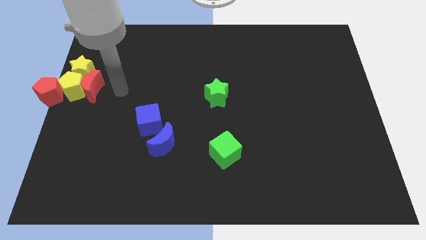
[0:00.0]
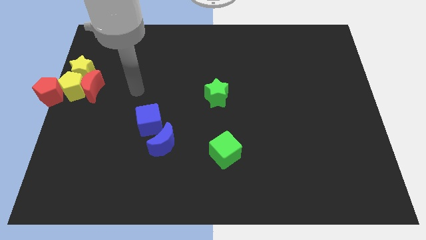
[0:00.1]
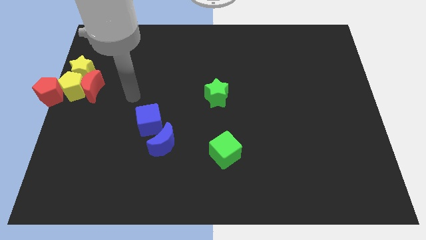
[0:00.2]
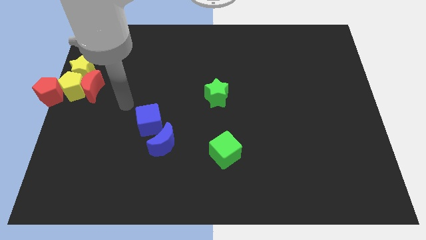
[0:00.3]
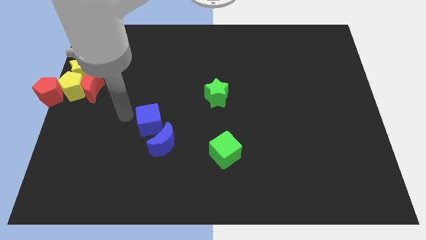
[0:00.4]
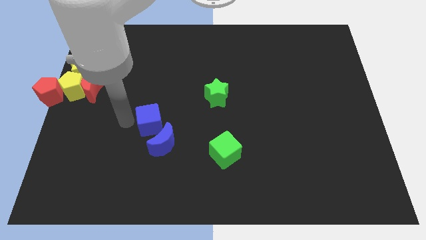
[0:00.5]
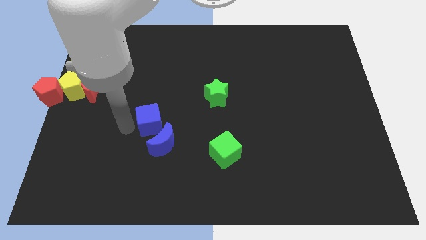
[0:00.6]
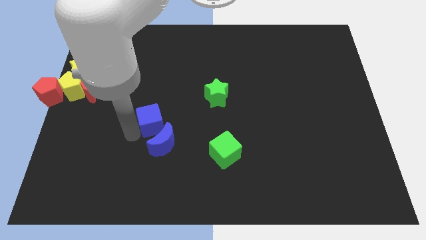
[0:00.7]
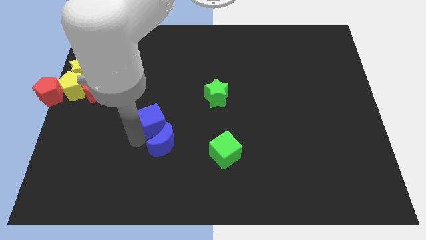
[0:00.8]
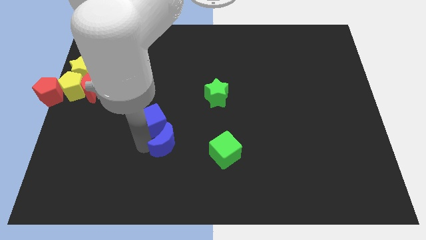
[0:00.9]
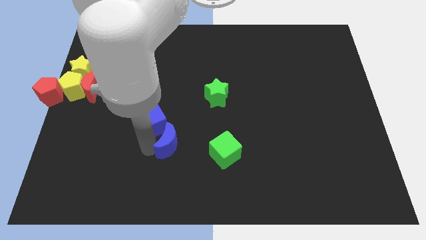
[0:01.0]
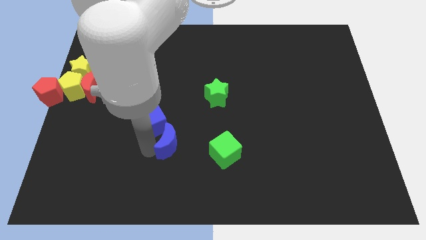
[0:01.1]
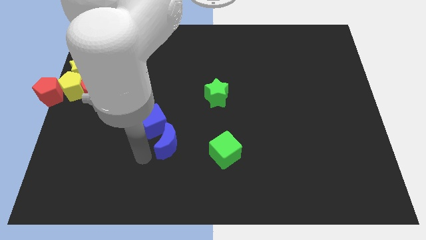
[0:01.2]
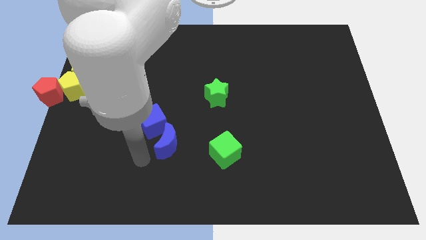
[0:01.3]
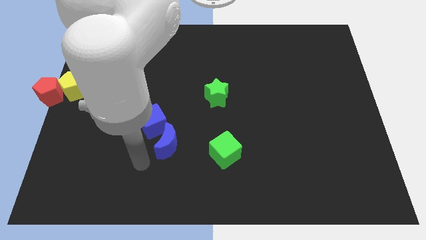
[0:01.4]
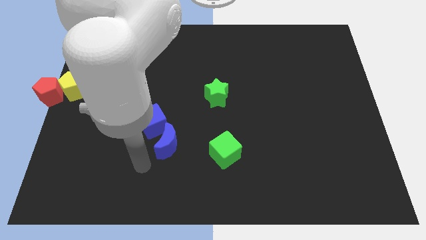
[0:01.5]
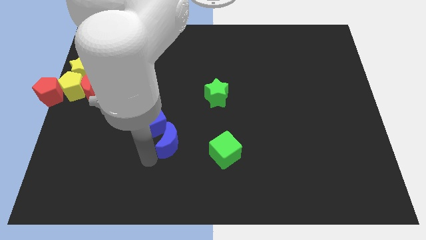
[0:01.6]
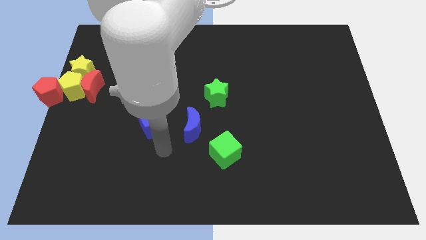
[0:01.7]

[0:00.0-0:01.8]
separate the blue crescent from the blue cube

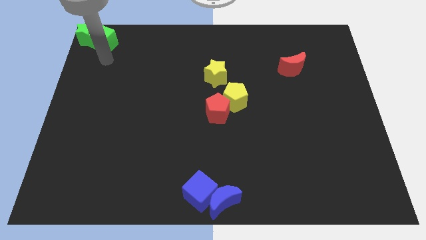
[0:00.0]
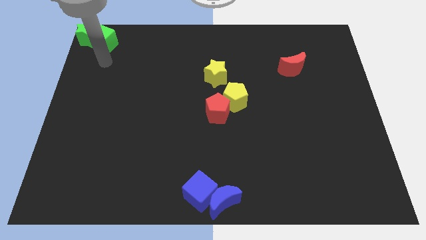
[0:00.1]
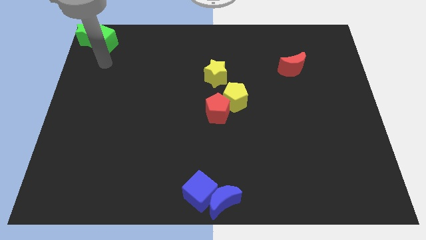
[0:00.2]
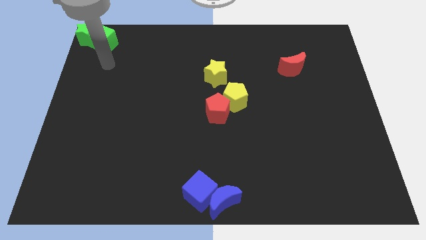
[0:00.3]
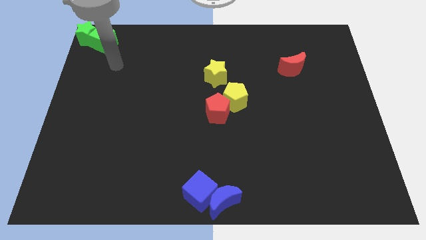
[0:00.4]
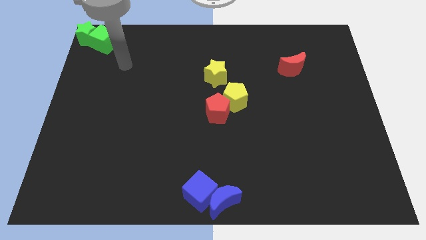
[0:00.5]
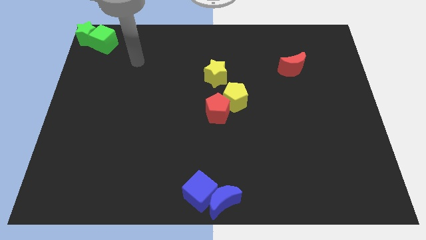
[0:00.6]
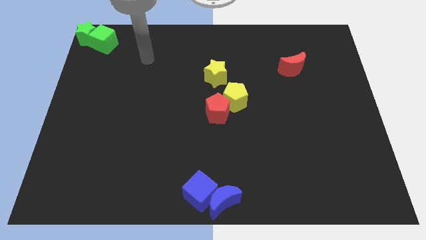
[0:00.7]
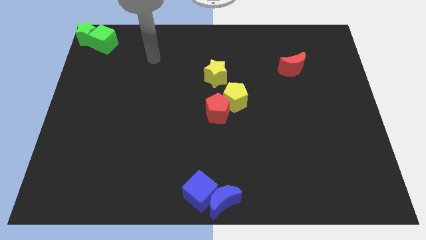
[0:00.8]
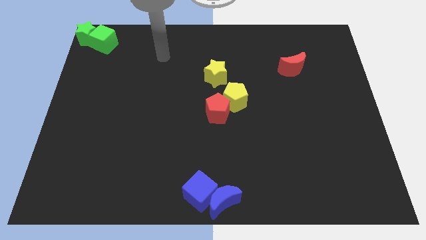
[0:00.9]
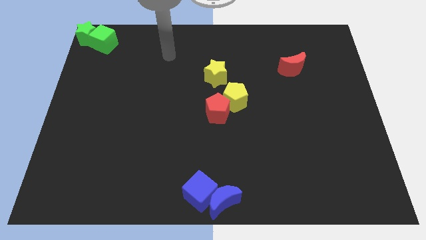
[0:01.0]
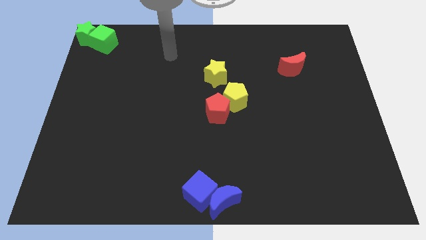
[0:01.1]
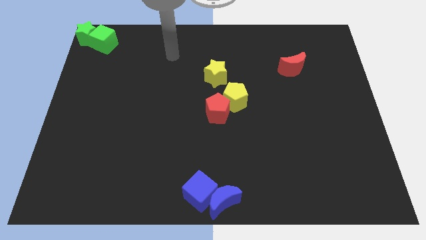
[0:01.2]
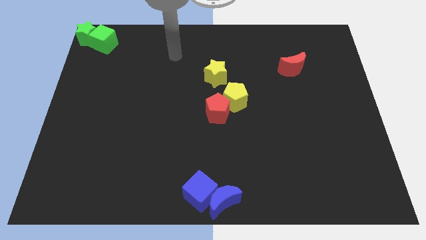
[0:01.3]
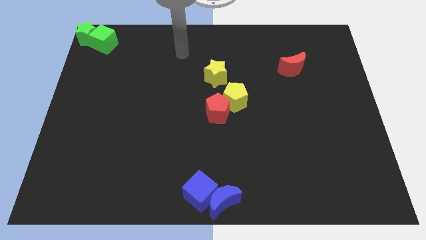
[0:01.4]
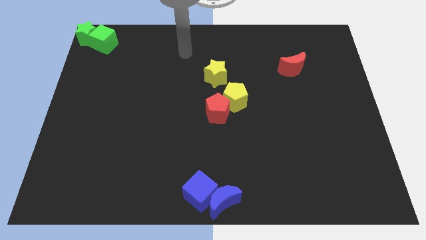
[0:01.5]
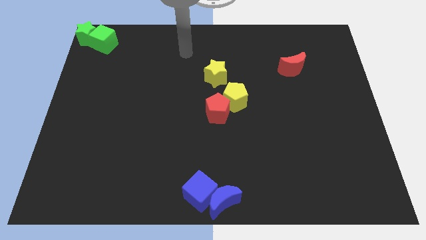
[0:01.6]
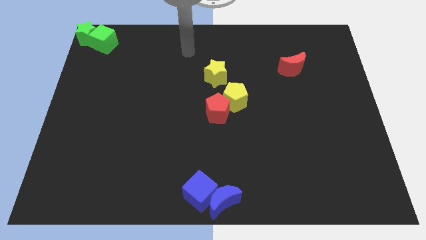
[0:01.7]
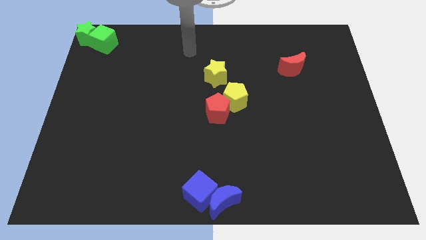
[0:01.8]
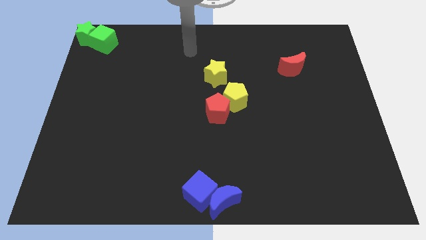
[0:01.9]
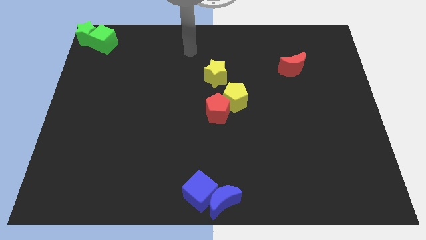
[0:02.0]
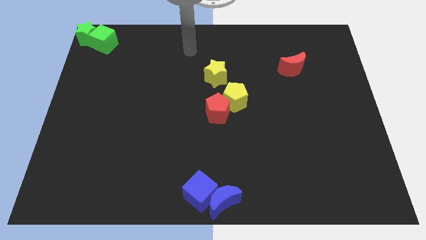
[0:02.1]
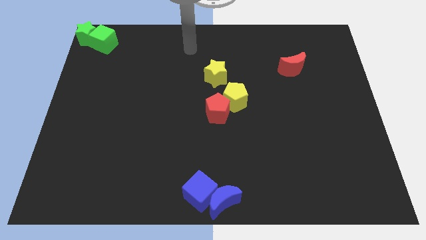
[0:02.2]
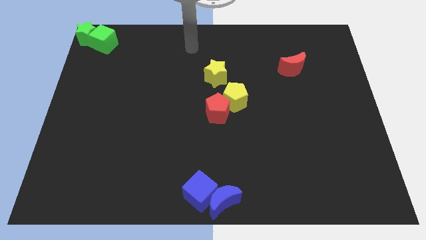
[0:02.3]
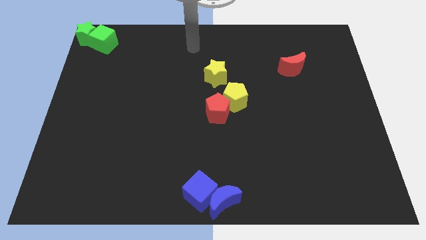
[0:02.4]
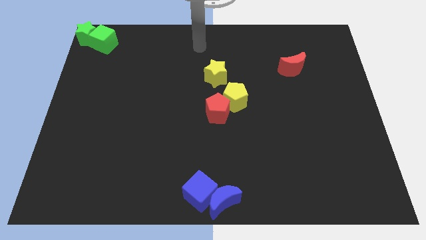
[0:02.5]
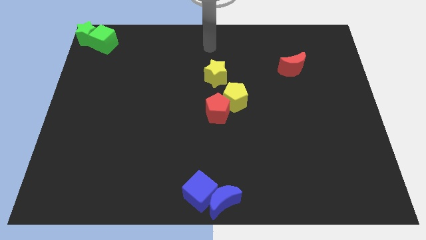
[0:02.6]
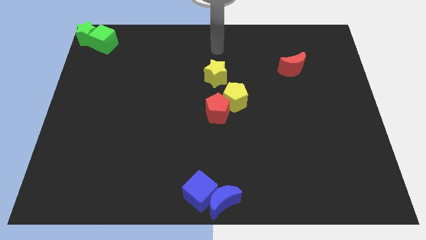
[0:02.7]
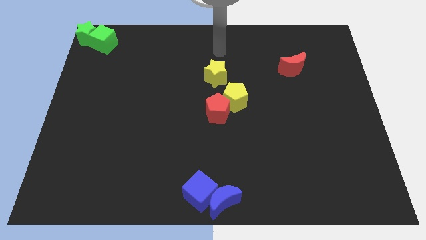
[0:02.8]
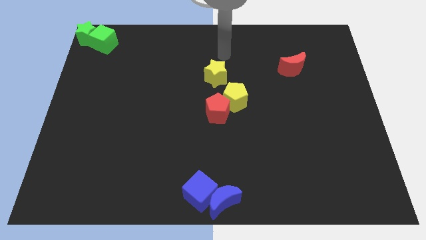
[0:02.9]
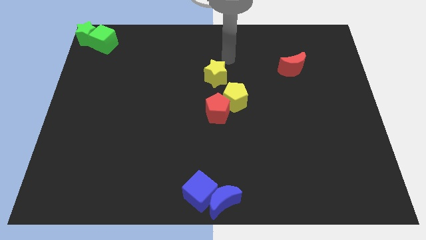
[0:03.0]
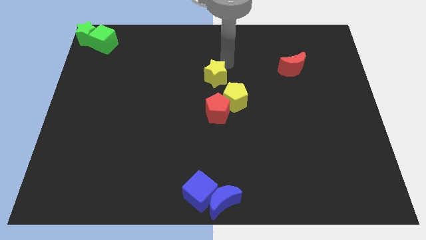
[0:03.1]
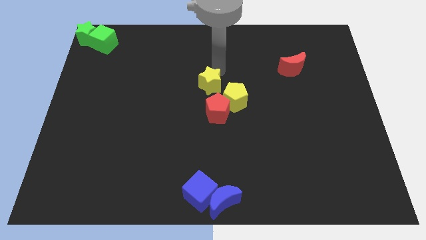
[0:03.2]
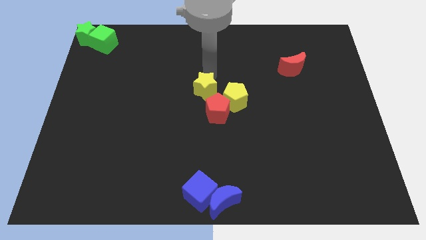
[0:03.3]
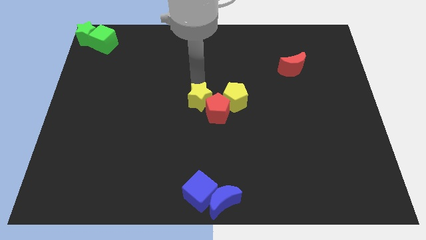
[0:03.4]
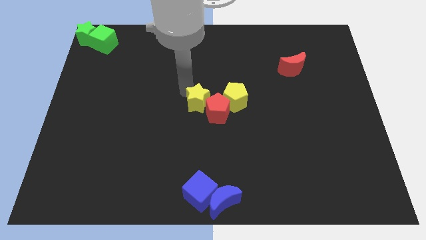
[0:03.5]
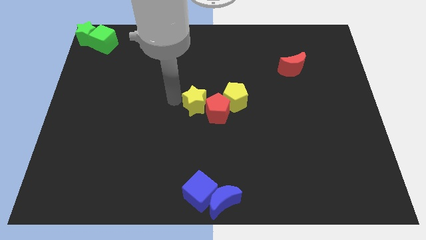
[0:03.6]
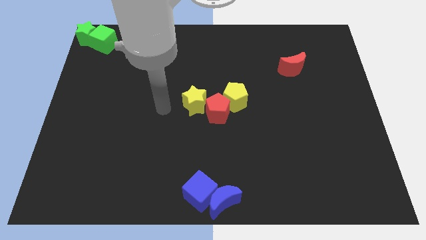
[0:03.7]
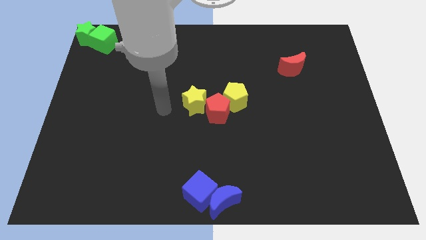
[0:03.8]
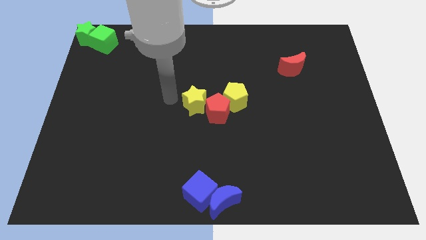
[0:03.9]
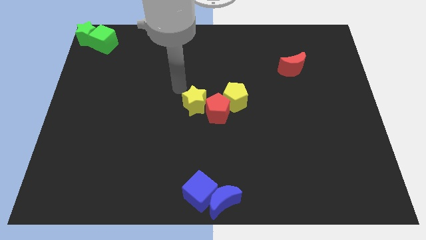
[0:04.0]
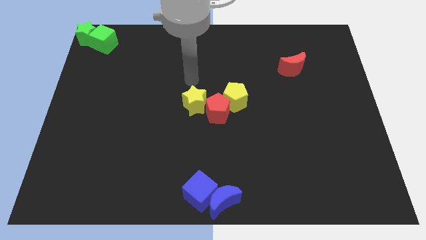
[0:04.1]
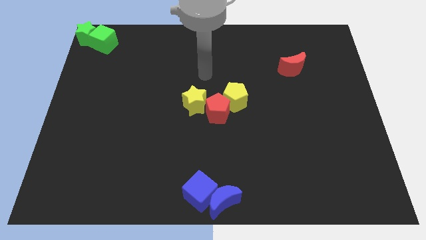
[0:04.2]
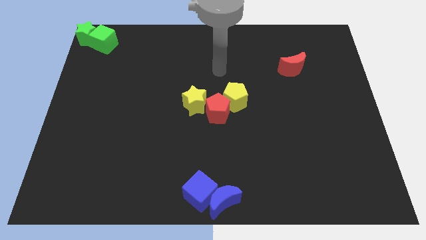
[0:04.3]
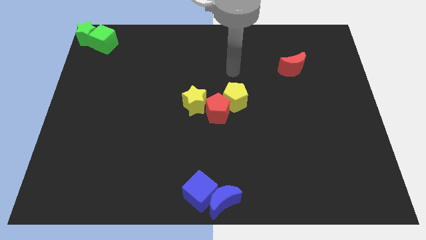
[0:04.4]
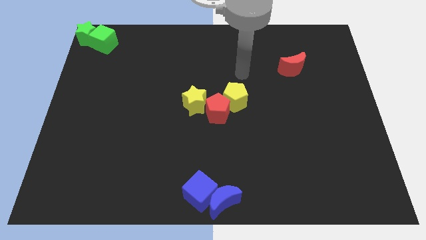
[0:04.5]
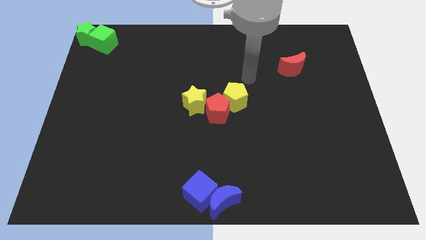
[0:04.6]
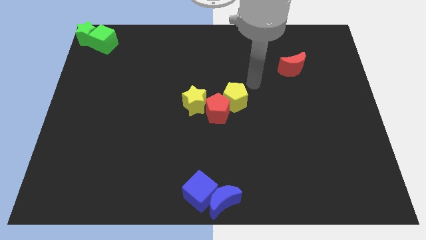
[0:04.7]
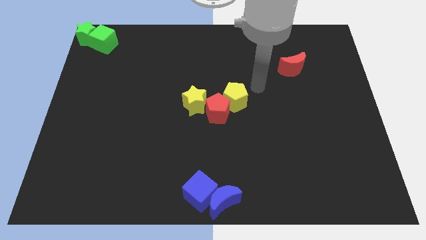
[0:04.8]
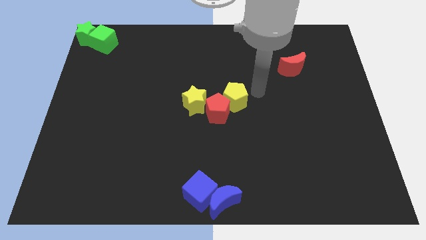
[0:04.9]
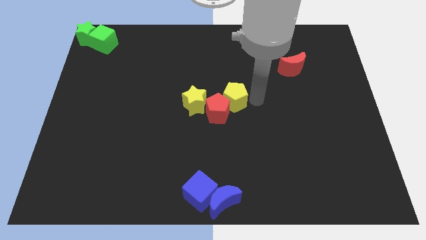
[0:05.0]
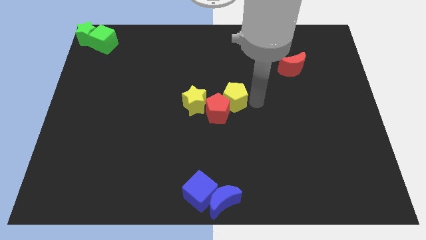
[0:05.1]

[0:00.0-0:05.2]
drag the yellow star to top left of red pentagon

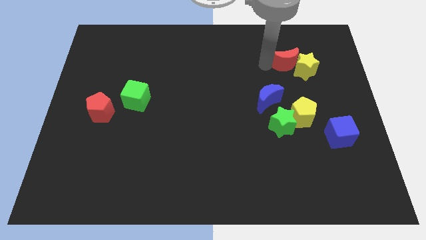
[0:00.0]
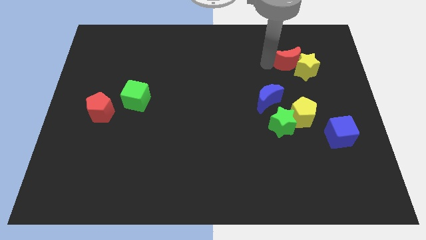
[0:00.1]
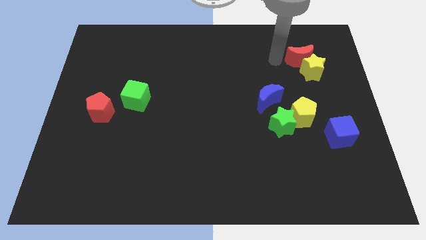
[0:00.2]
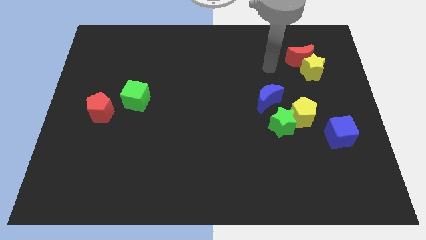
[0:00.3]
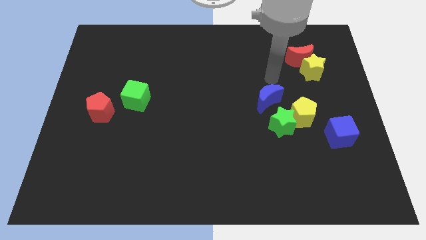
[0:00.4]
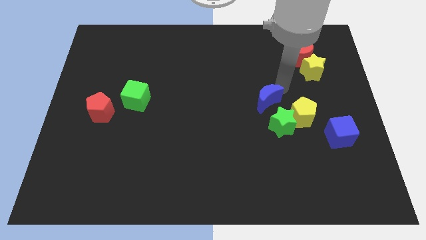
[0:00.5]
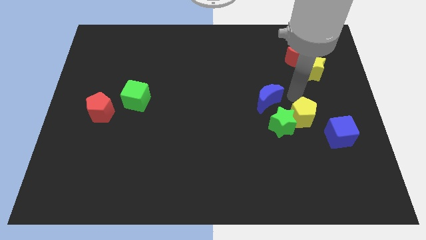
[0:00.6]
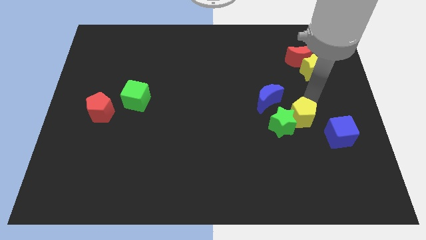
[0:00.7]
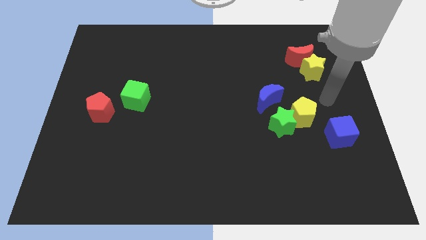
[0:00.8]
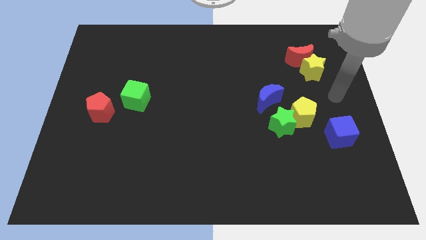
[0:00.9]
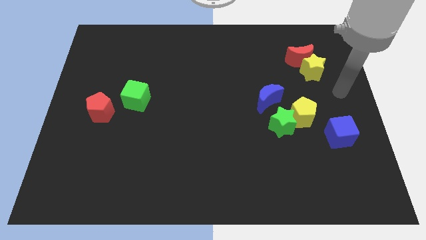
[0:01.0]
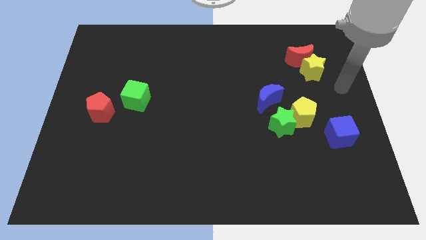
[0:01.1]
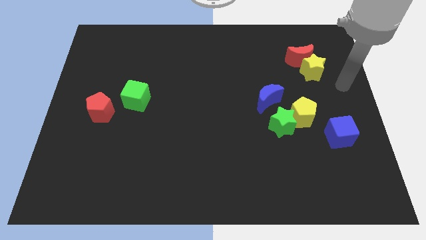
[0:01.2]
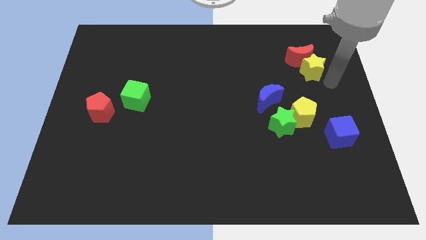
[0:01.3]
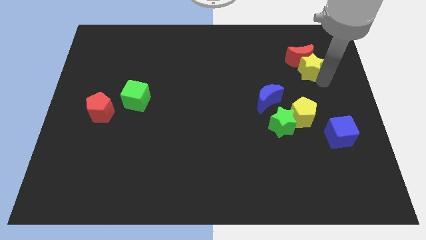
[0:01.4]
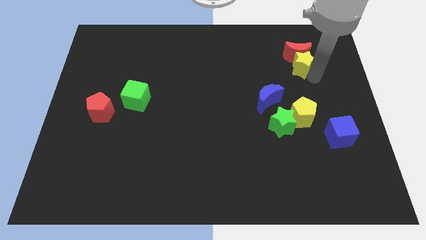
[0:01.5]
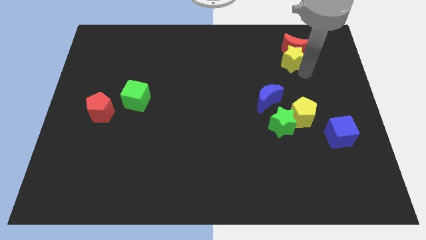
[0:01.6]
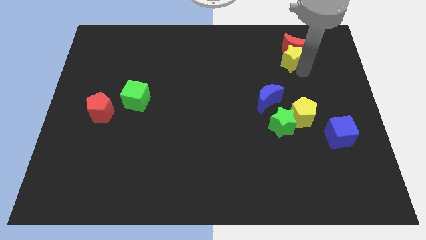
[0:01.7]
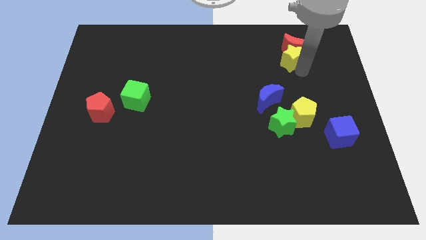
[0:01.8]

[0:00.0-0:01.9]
push the yellow star and red moon to the top side
